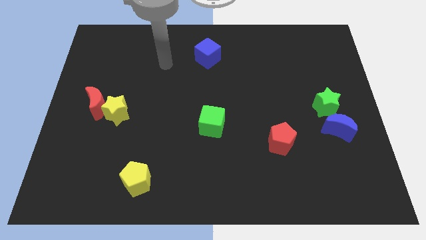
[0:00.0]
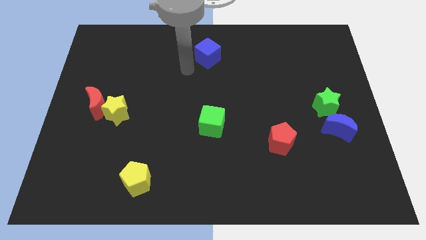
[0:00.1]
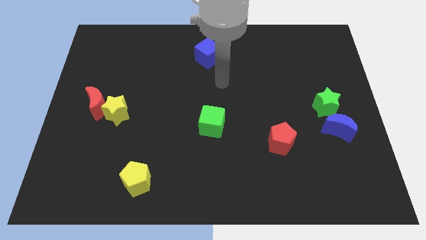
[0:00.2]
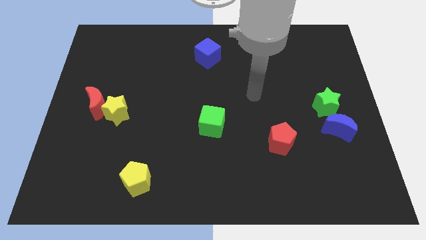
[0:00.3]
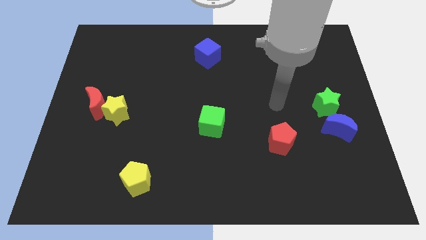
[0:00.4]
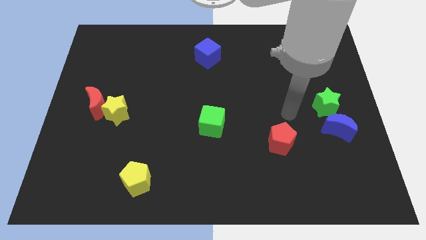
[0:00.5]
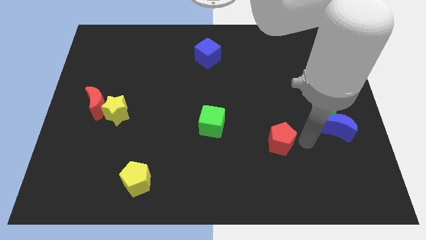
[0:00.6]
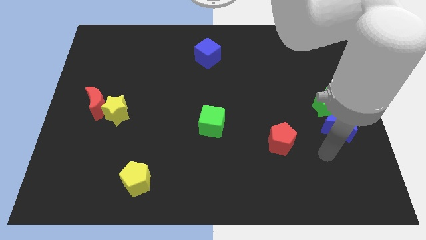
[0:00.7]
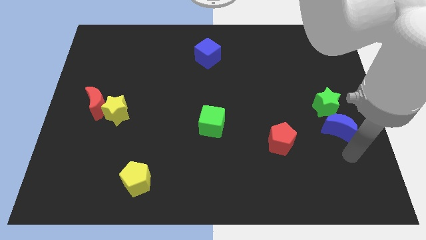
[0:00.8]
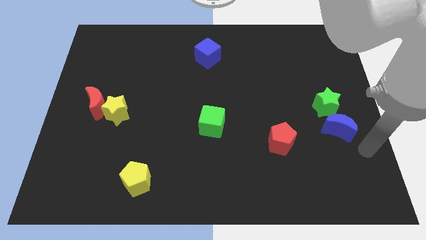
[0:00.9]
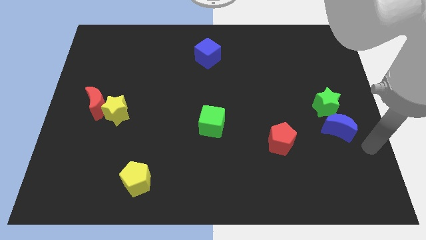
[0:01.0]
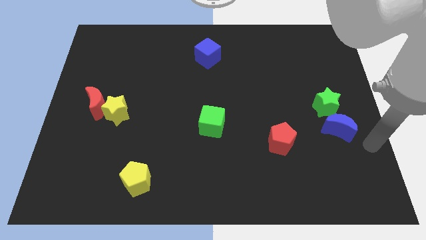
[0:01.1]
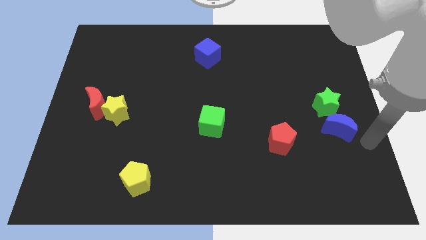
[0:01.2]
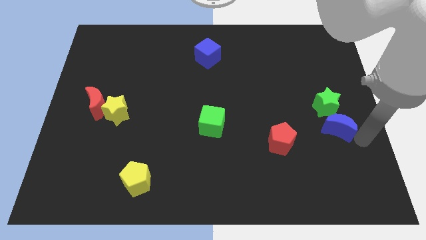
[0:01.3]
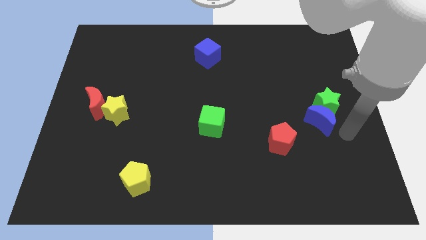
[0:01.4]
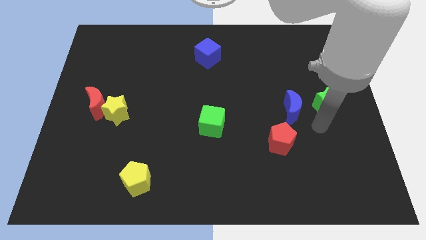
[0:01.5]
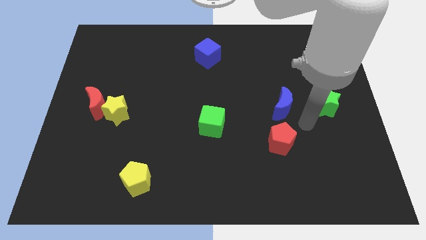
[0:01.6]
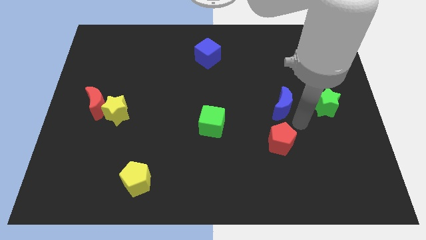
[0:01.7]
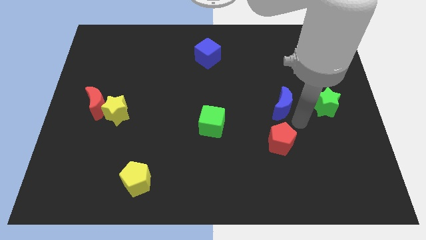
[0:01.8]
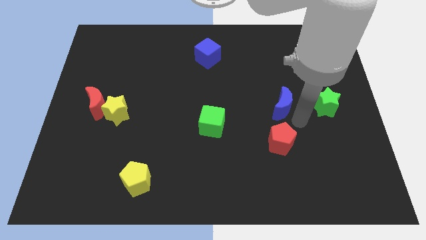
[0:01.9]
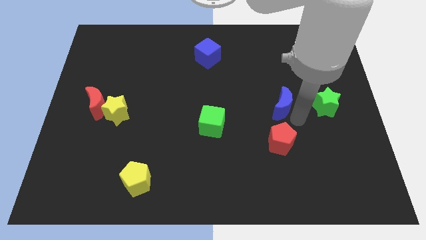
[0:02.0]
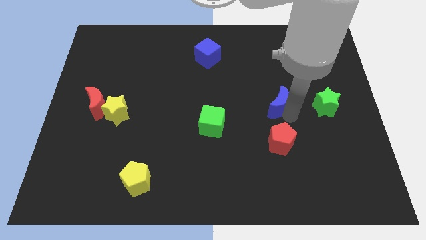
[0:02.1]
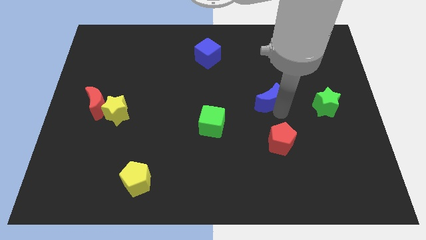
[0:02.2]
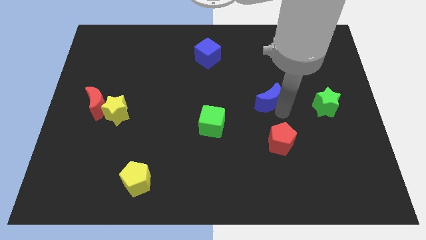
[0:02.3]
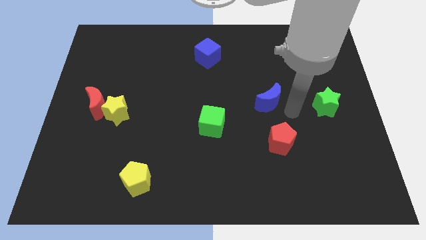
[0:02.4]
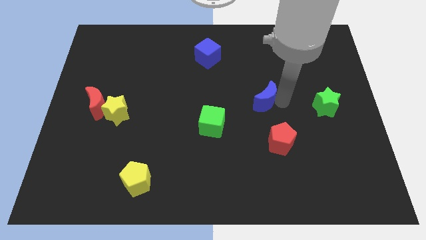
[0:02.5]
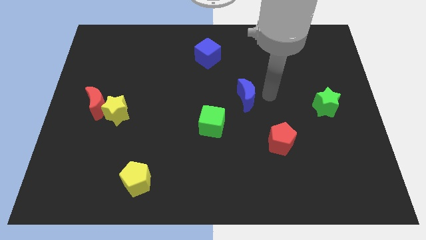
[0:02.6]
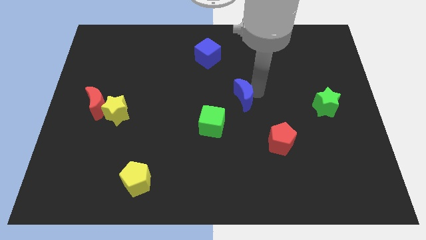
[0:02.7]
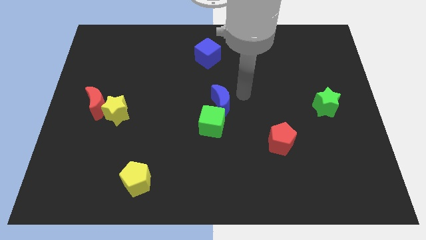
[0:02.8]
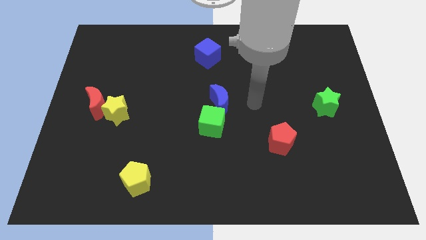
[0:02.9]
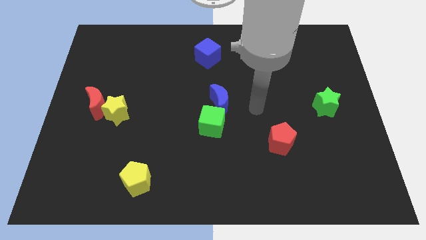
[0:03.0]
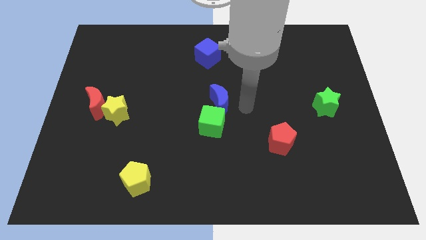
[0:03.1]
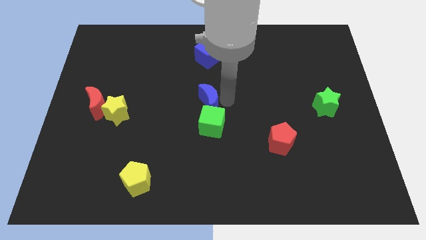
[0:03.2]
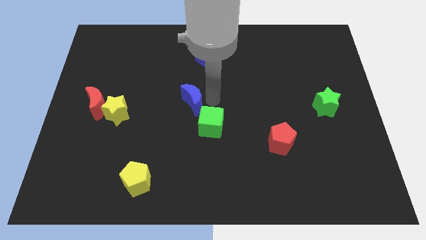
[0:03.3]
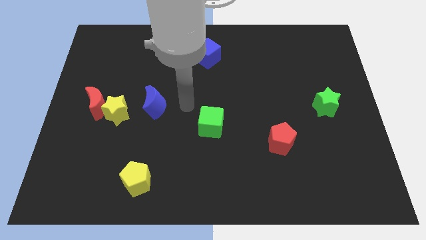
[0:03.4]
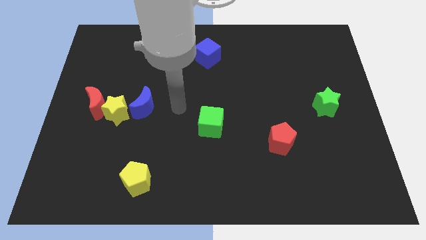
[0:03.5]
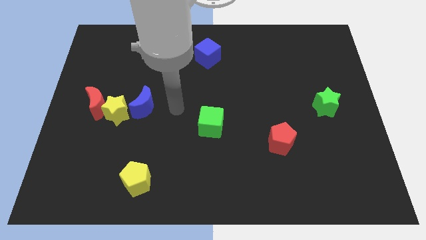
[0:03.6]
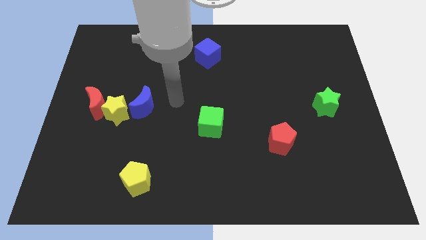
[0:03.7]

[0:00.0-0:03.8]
push the blue moon to the yellow star

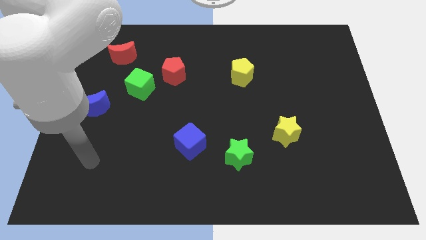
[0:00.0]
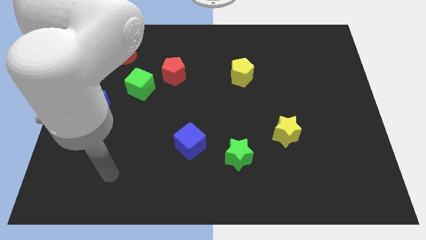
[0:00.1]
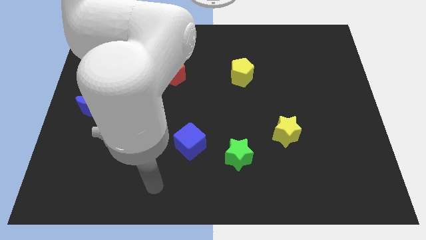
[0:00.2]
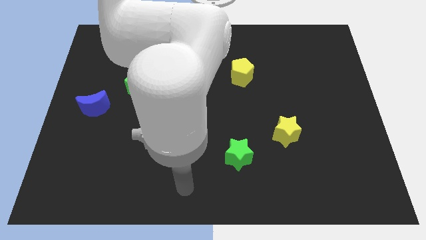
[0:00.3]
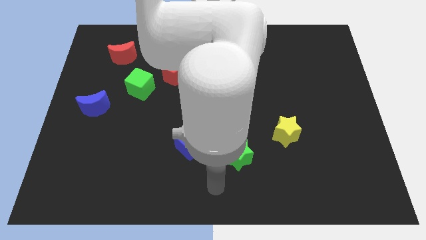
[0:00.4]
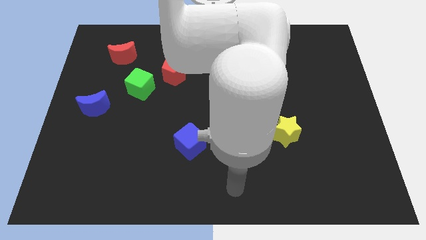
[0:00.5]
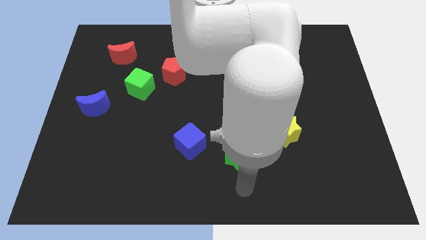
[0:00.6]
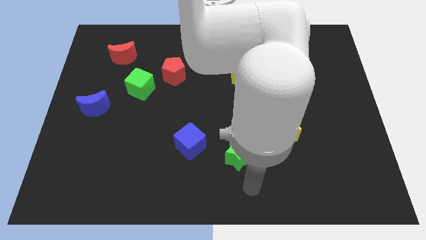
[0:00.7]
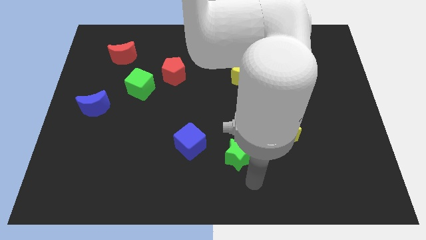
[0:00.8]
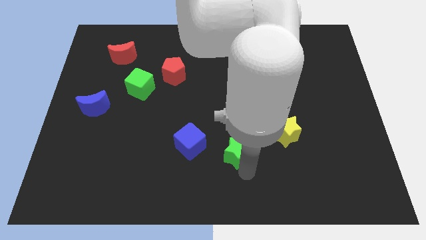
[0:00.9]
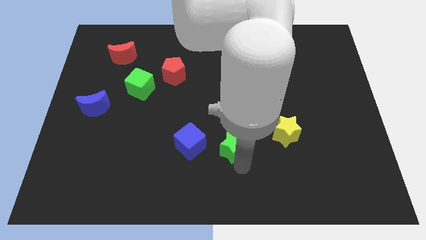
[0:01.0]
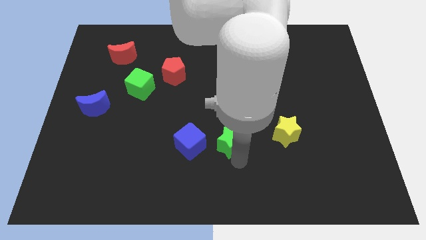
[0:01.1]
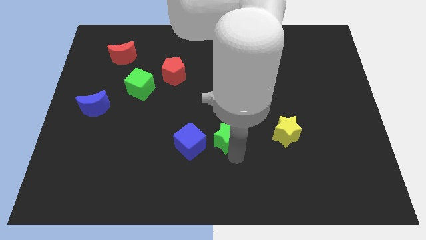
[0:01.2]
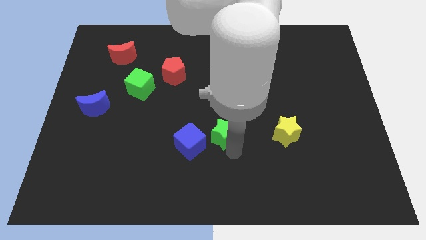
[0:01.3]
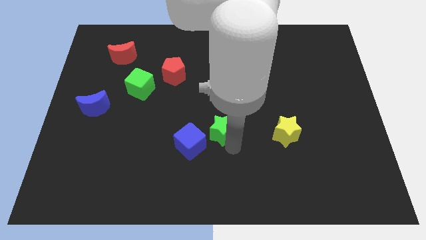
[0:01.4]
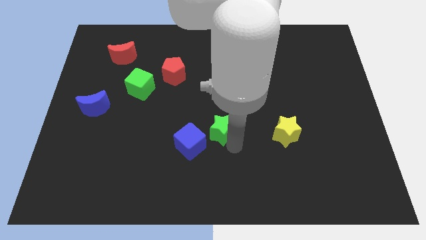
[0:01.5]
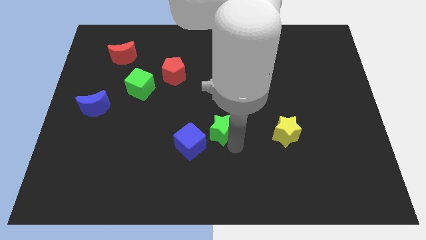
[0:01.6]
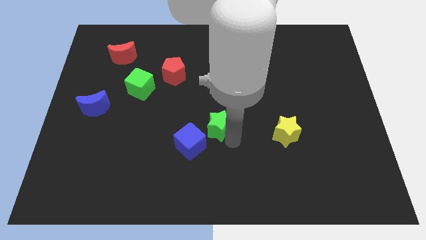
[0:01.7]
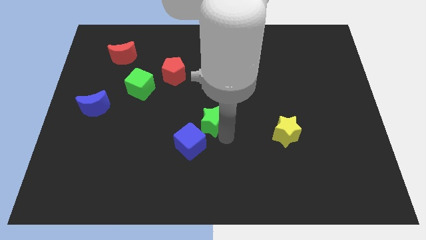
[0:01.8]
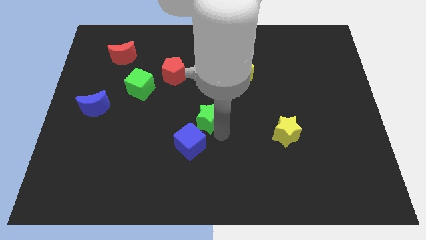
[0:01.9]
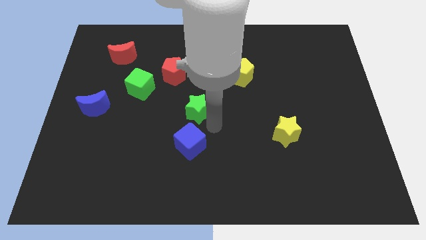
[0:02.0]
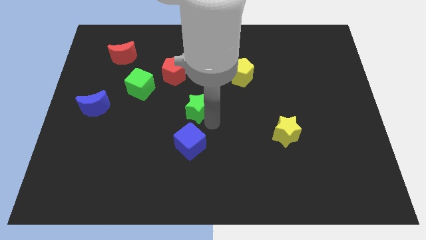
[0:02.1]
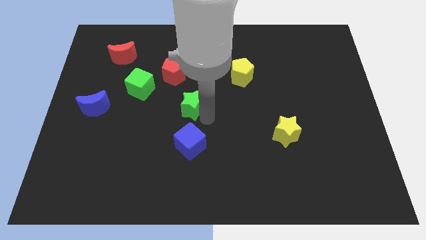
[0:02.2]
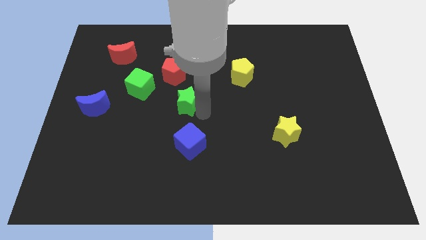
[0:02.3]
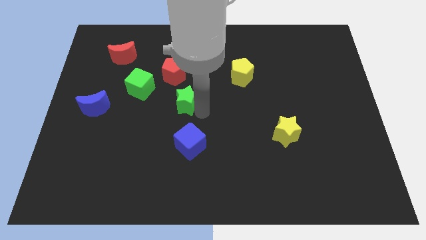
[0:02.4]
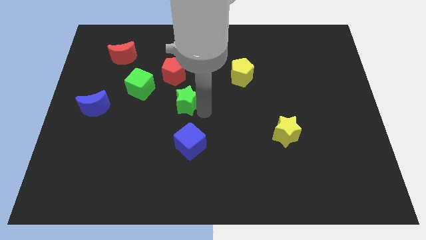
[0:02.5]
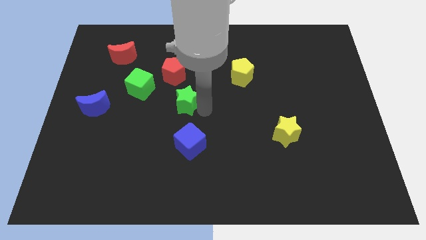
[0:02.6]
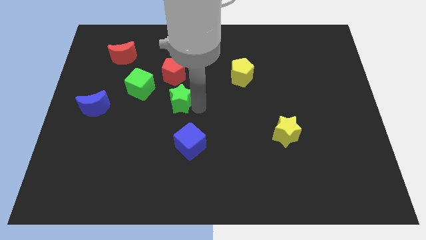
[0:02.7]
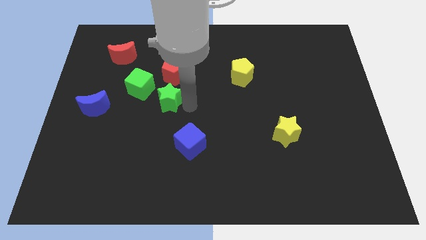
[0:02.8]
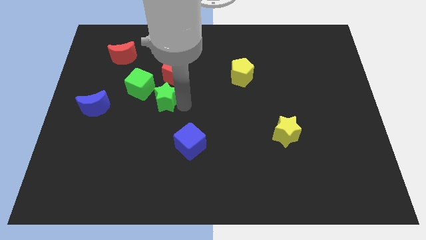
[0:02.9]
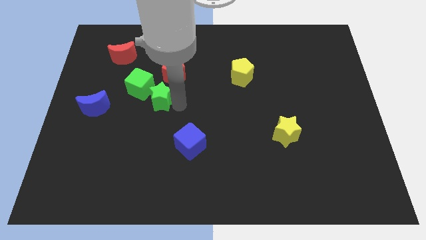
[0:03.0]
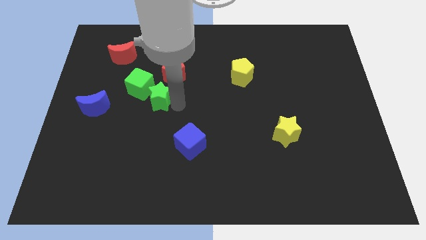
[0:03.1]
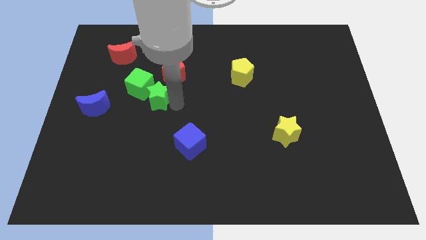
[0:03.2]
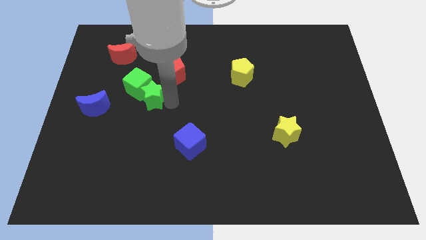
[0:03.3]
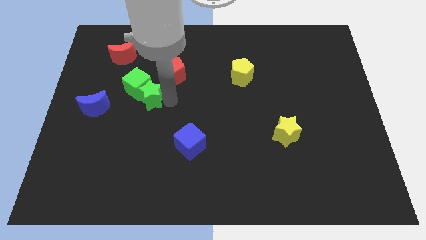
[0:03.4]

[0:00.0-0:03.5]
put the green star to the green cube

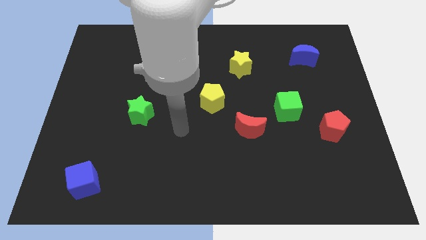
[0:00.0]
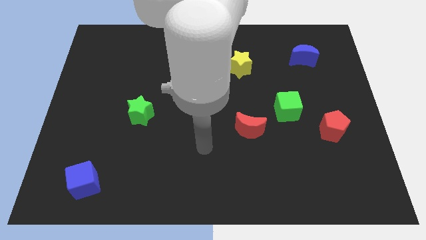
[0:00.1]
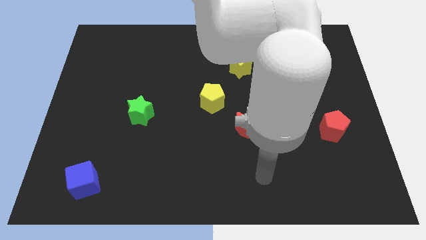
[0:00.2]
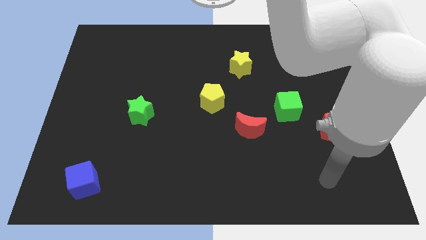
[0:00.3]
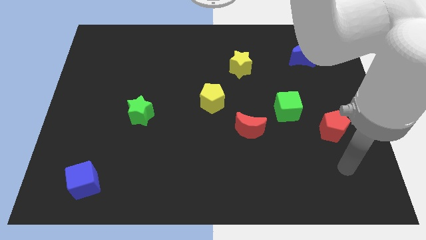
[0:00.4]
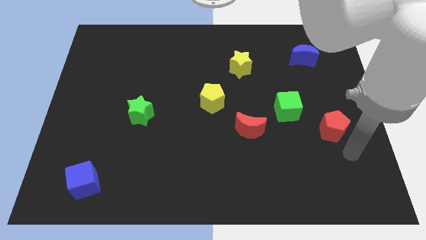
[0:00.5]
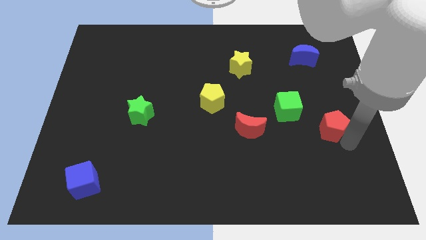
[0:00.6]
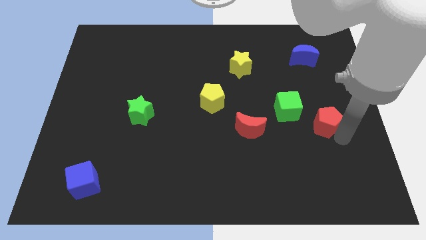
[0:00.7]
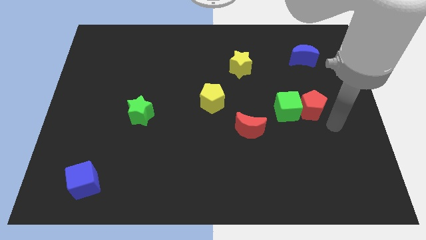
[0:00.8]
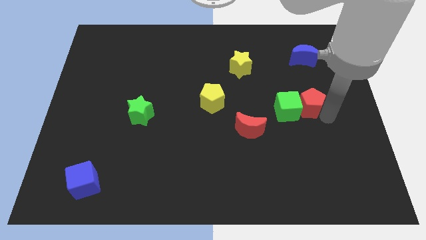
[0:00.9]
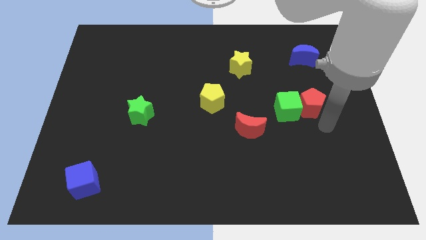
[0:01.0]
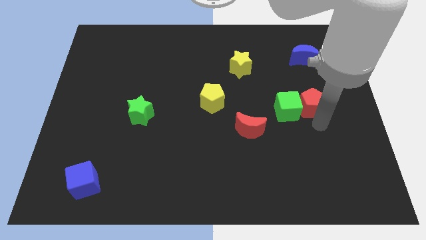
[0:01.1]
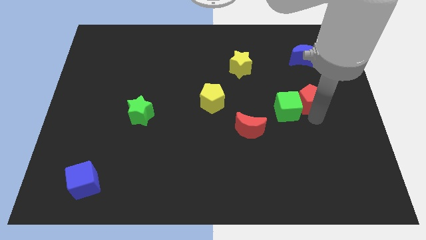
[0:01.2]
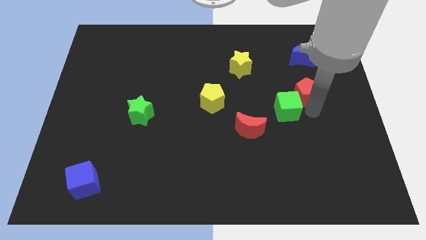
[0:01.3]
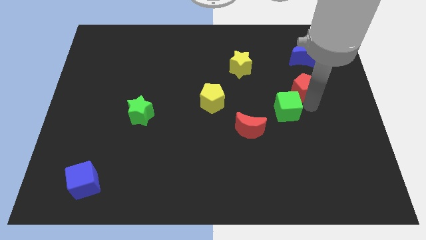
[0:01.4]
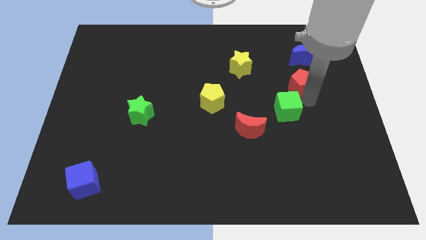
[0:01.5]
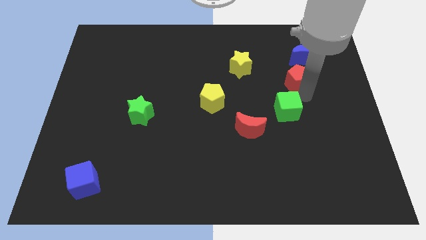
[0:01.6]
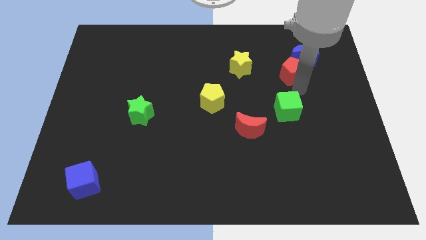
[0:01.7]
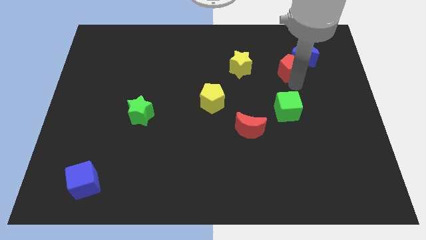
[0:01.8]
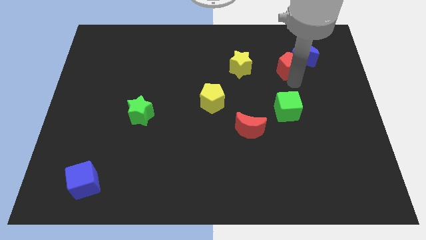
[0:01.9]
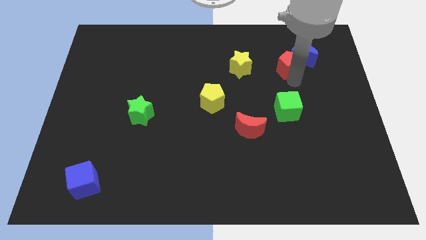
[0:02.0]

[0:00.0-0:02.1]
move the red pentagon next to the blue moon
